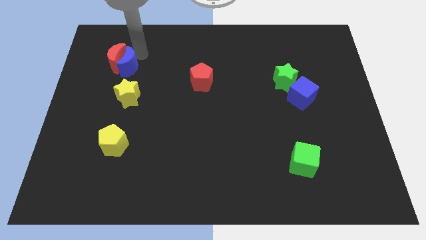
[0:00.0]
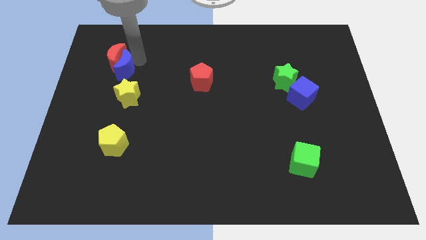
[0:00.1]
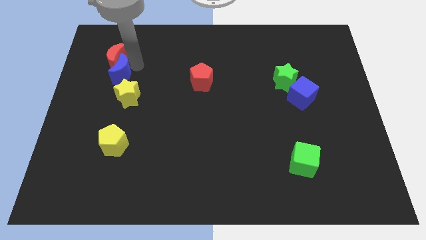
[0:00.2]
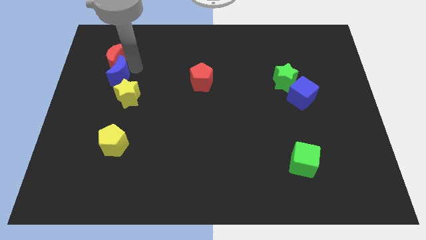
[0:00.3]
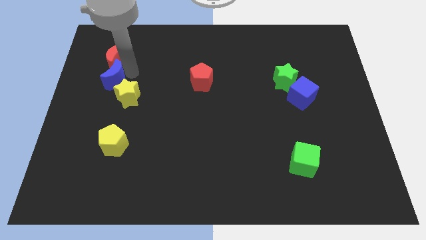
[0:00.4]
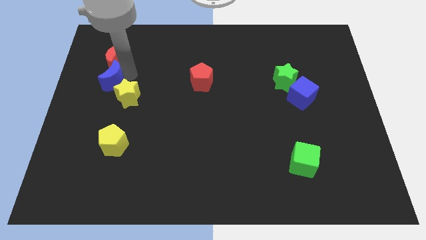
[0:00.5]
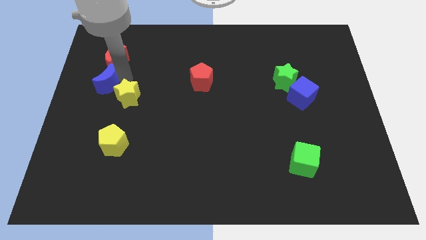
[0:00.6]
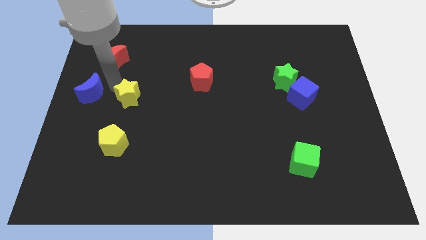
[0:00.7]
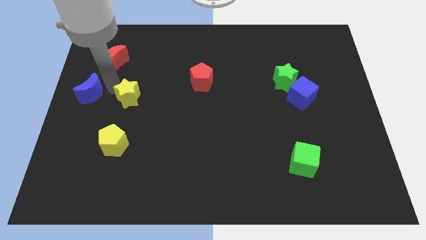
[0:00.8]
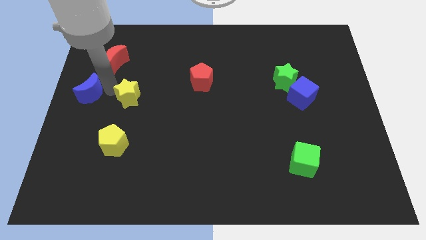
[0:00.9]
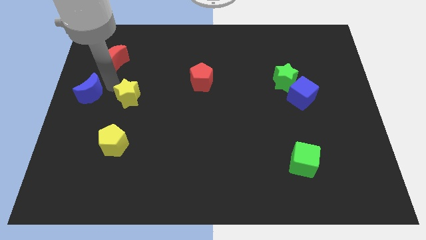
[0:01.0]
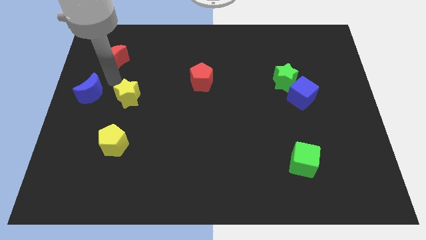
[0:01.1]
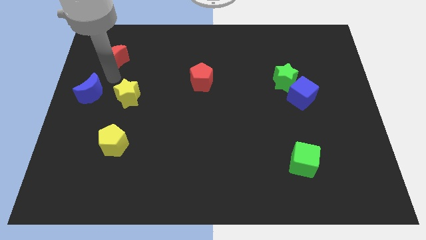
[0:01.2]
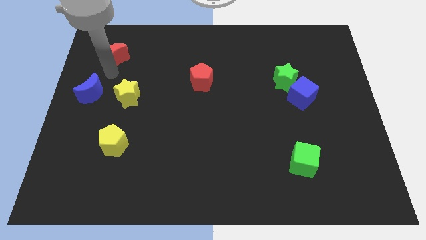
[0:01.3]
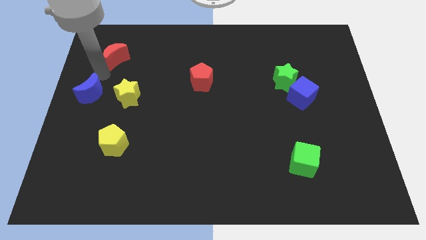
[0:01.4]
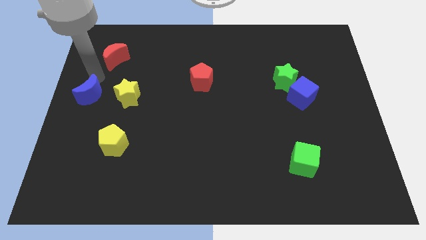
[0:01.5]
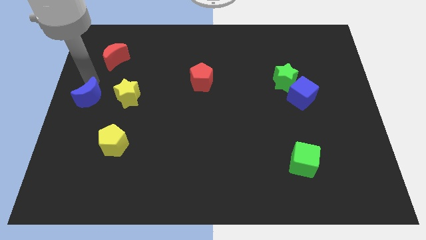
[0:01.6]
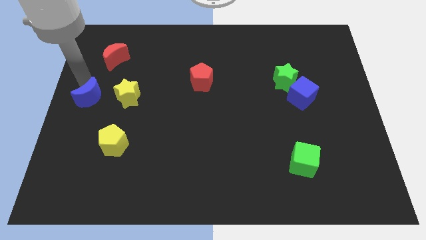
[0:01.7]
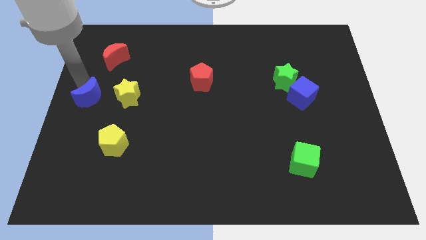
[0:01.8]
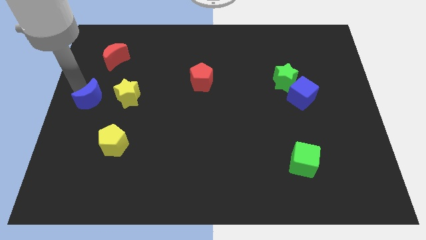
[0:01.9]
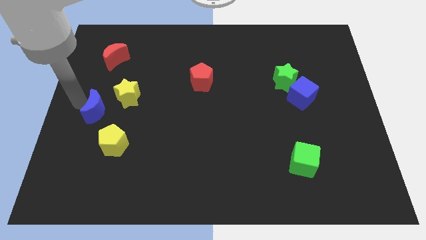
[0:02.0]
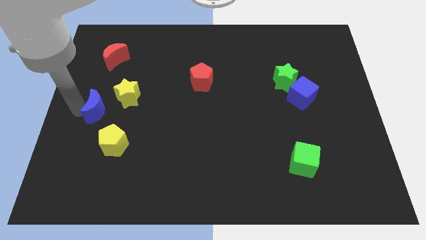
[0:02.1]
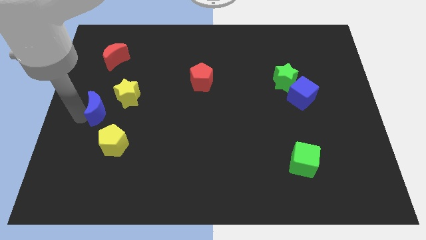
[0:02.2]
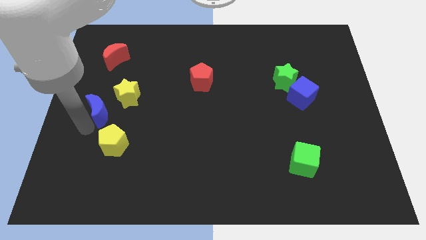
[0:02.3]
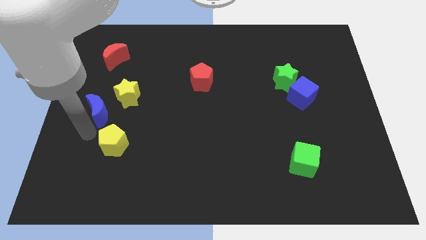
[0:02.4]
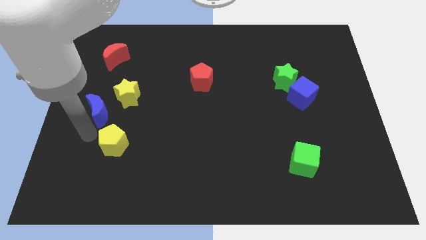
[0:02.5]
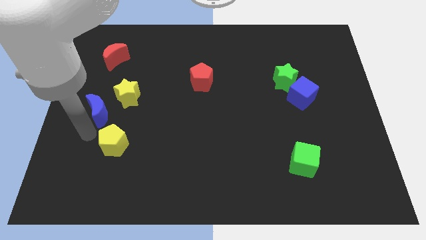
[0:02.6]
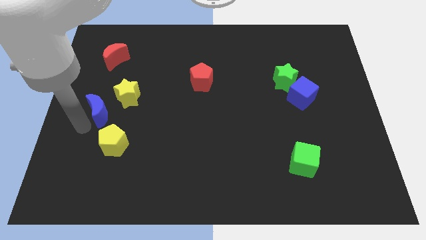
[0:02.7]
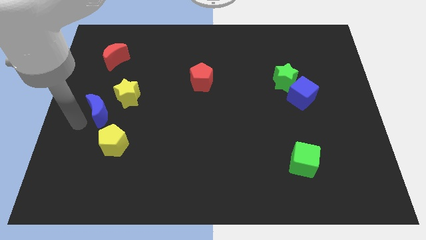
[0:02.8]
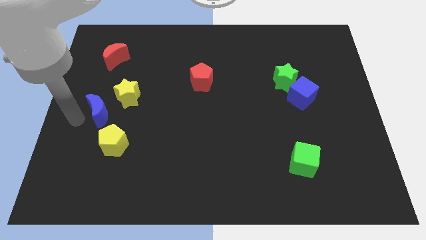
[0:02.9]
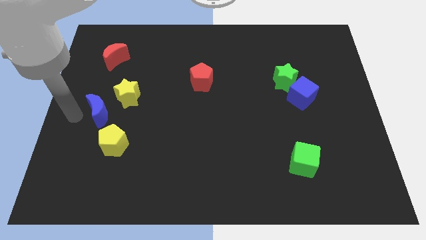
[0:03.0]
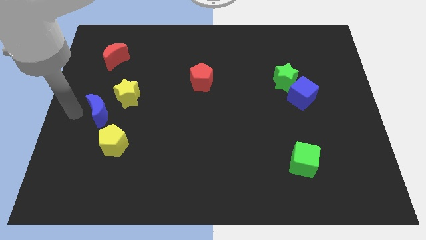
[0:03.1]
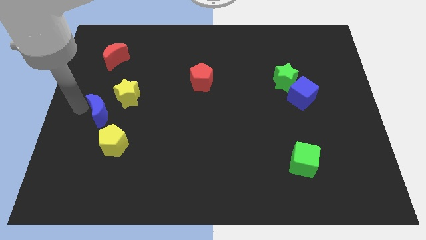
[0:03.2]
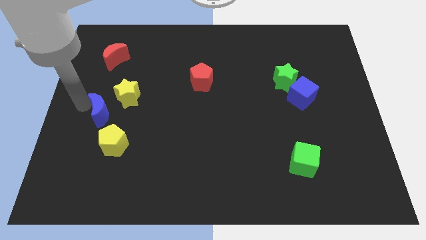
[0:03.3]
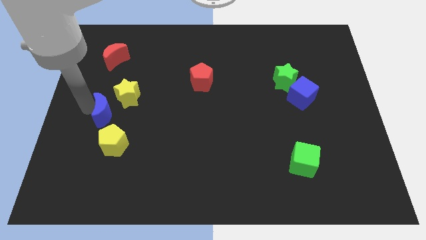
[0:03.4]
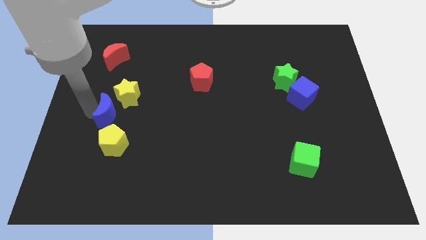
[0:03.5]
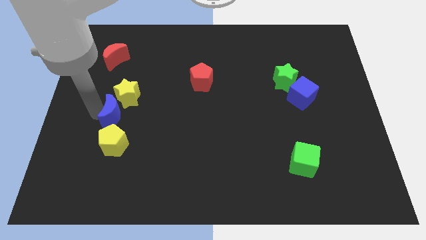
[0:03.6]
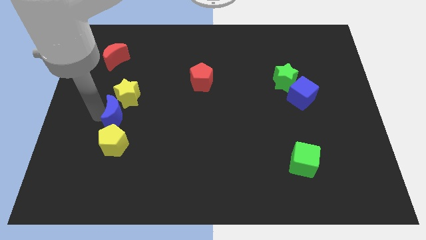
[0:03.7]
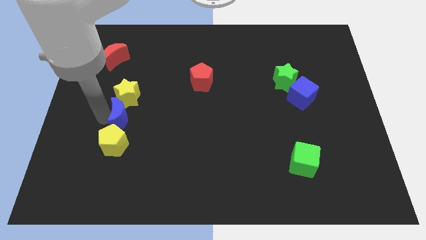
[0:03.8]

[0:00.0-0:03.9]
push the blue crescent to the top of the yellow pentagon

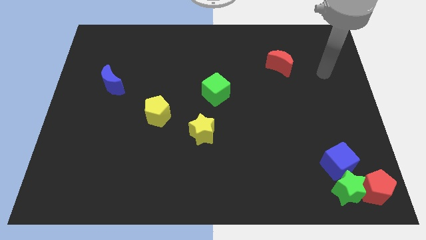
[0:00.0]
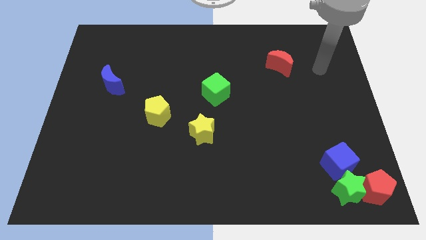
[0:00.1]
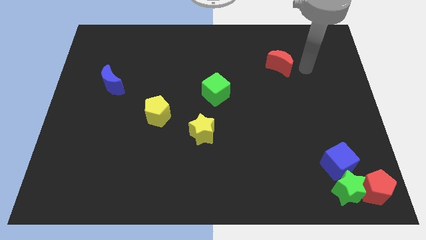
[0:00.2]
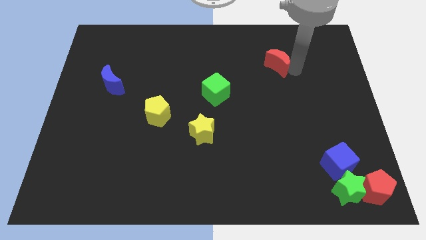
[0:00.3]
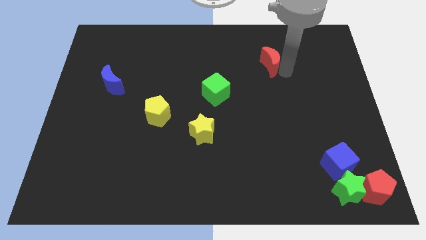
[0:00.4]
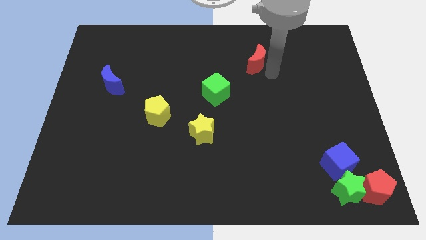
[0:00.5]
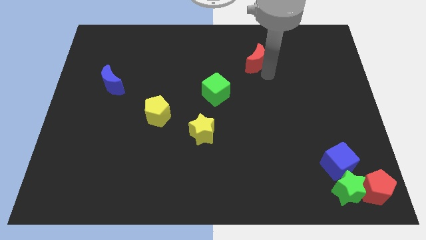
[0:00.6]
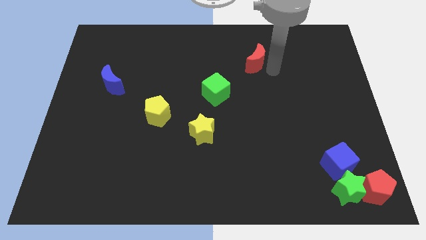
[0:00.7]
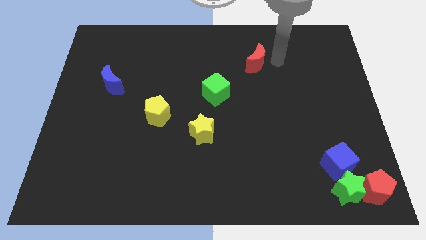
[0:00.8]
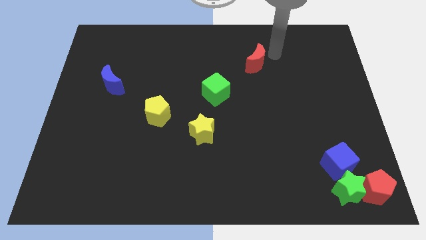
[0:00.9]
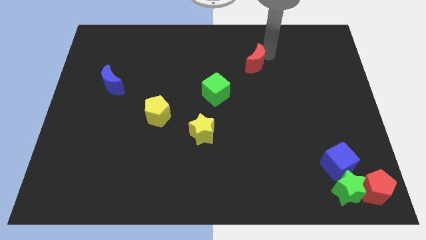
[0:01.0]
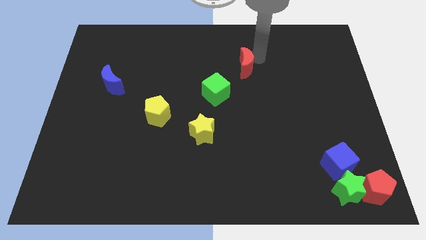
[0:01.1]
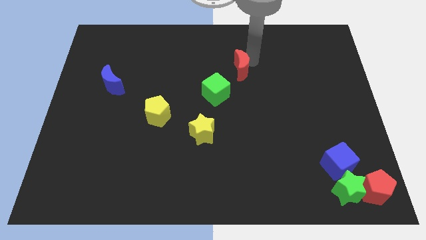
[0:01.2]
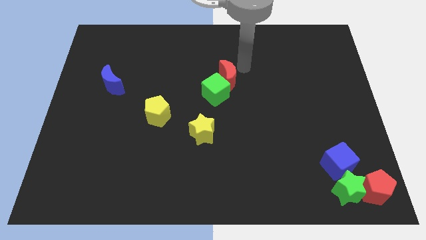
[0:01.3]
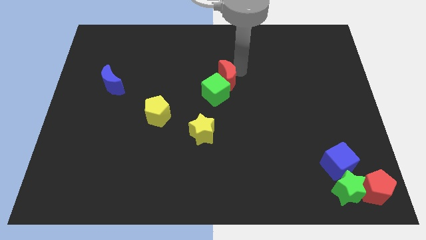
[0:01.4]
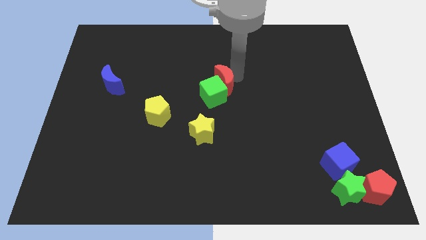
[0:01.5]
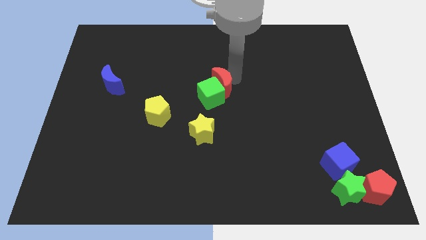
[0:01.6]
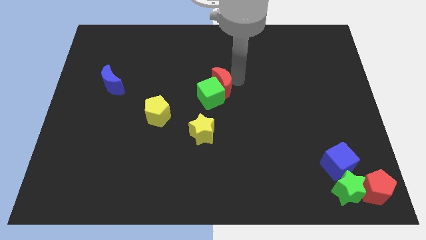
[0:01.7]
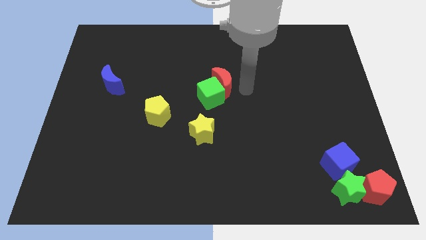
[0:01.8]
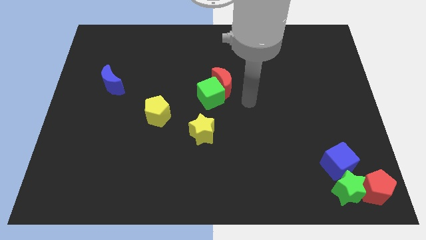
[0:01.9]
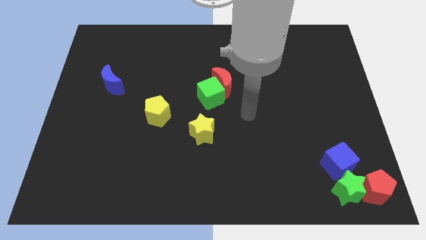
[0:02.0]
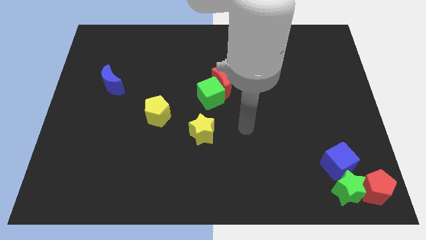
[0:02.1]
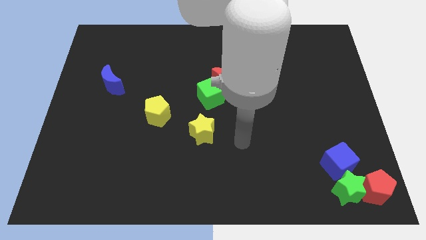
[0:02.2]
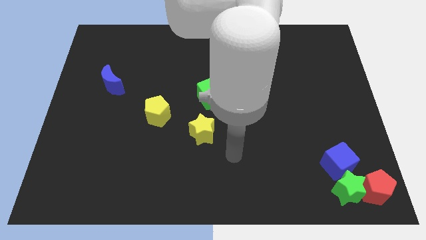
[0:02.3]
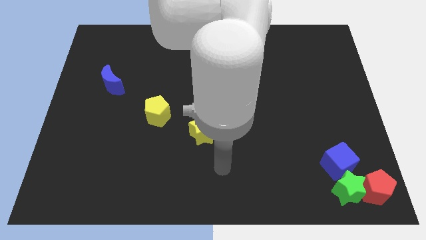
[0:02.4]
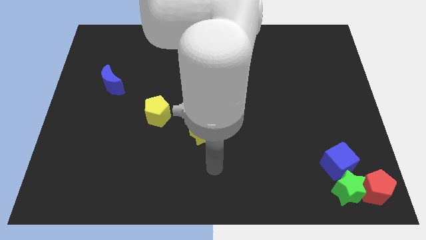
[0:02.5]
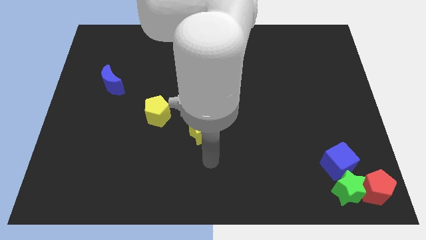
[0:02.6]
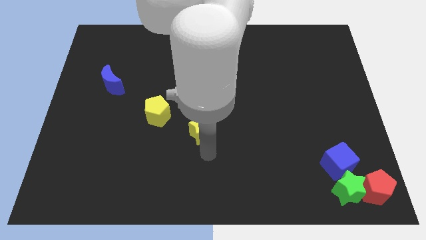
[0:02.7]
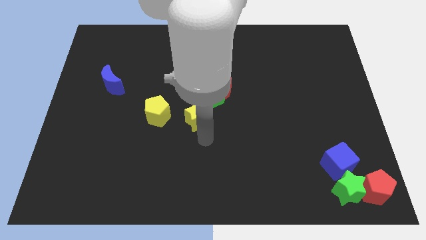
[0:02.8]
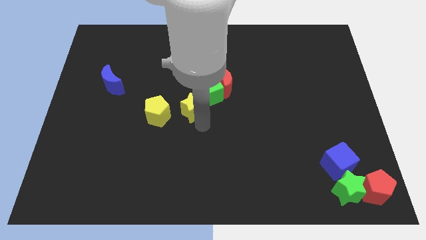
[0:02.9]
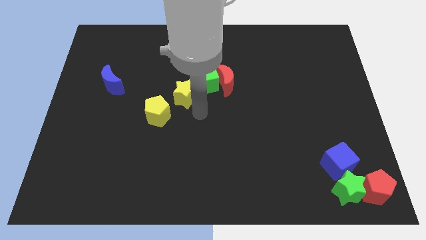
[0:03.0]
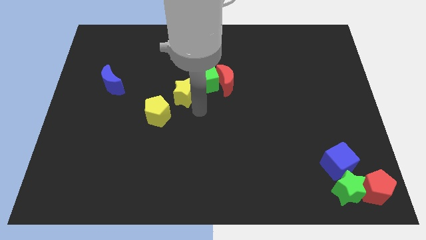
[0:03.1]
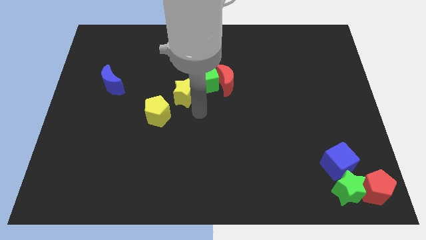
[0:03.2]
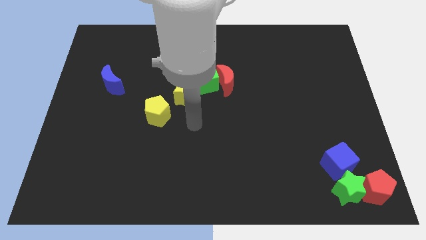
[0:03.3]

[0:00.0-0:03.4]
drag the red crescent and yellow star towards green cube

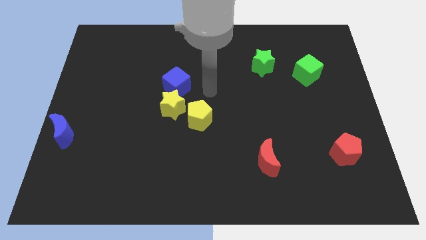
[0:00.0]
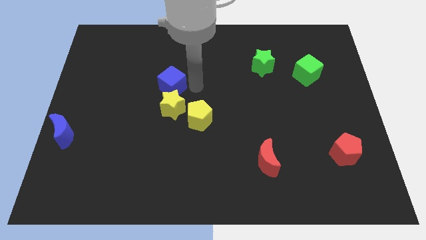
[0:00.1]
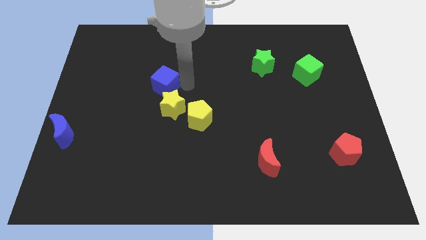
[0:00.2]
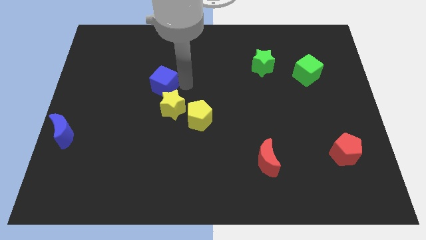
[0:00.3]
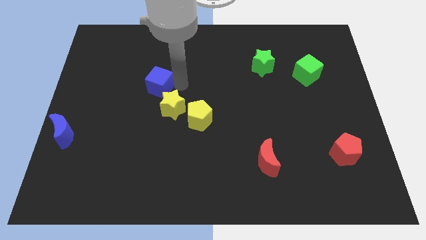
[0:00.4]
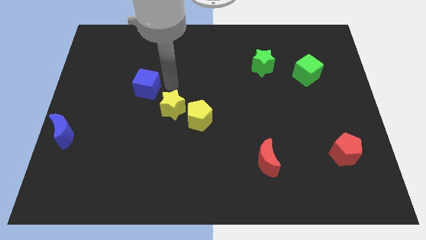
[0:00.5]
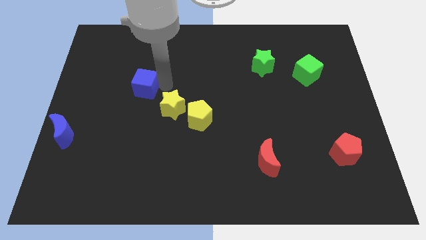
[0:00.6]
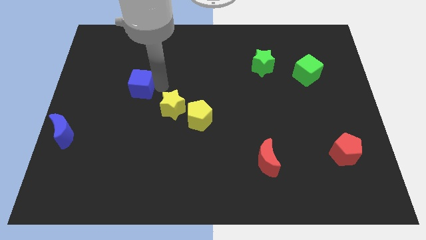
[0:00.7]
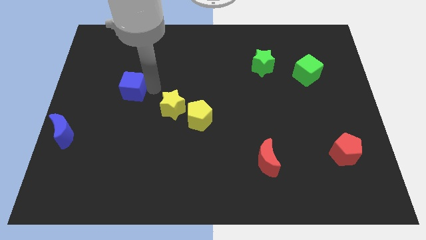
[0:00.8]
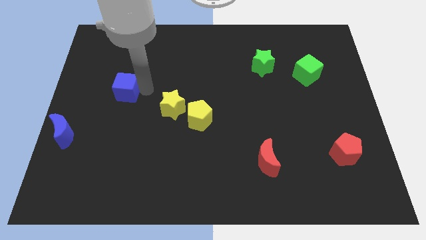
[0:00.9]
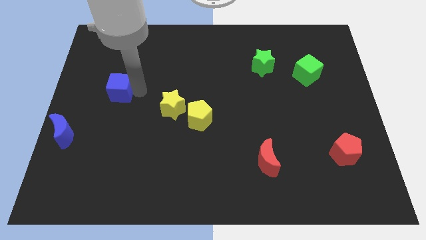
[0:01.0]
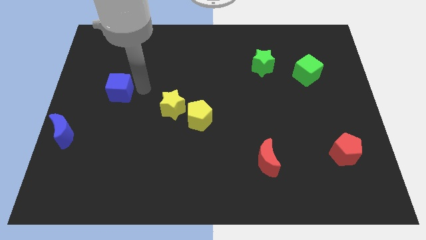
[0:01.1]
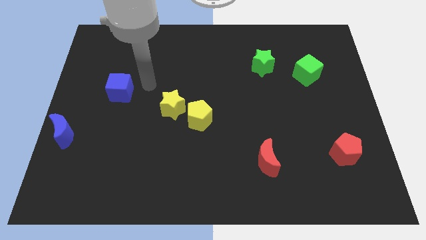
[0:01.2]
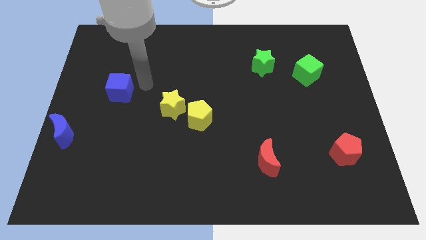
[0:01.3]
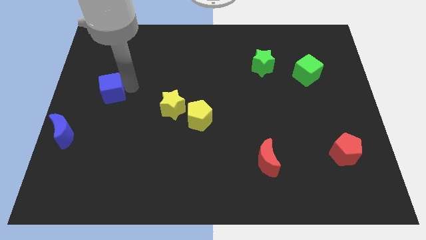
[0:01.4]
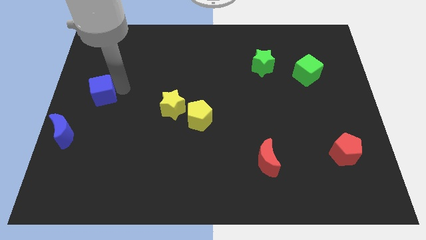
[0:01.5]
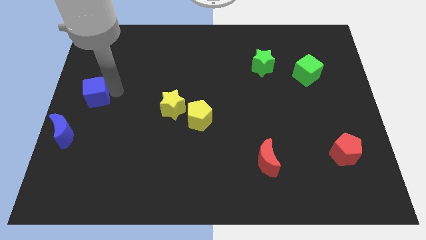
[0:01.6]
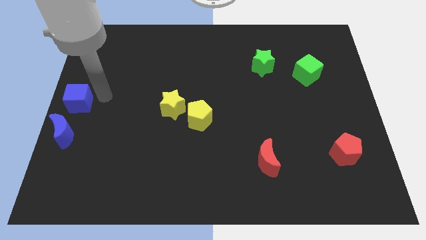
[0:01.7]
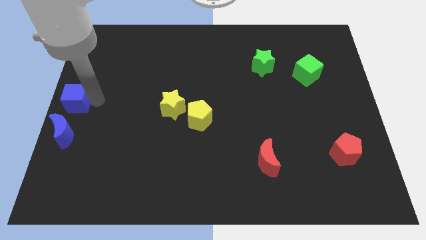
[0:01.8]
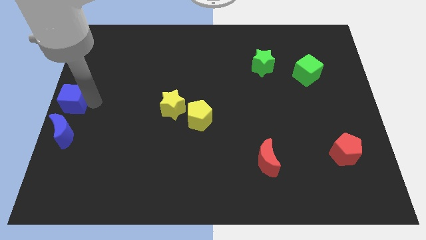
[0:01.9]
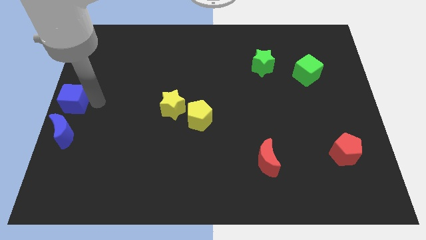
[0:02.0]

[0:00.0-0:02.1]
slide blue cube towards the left centre of the board
